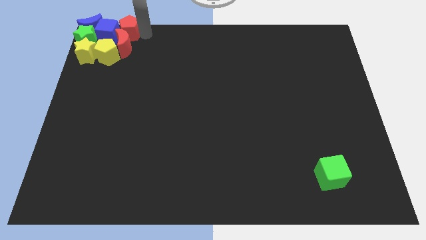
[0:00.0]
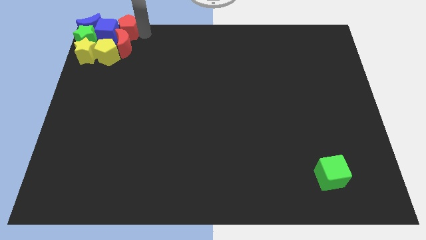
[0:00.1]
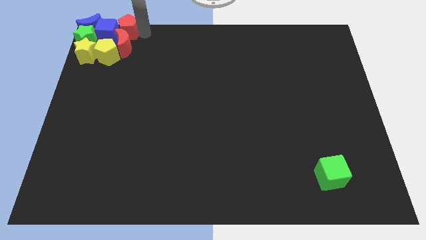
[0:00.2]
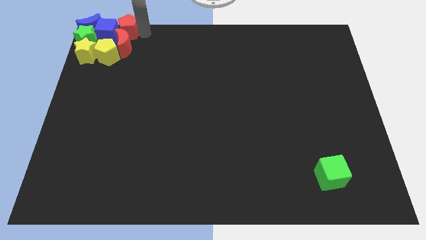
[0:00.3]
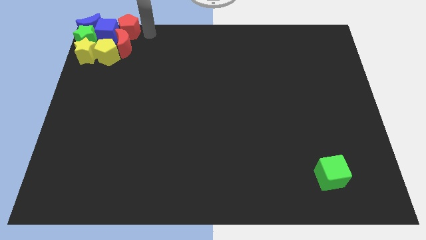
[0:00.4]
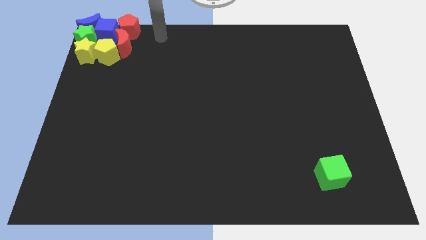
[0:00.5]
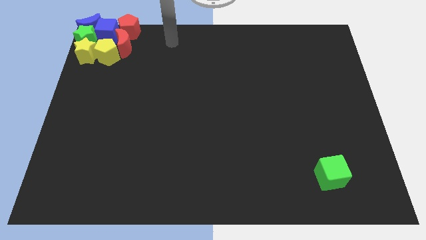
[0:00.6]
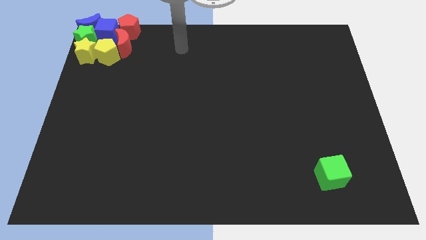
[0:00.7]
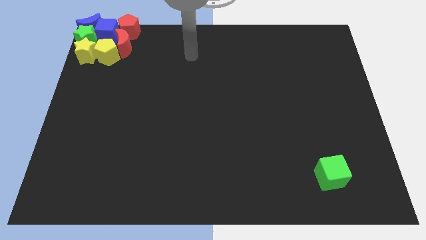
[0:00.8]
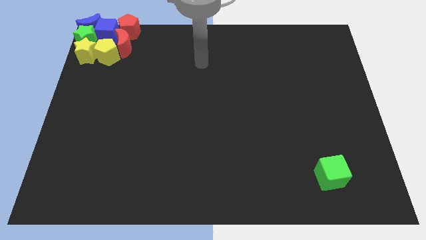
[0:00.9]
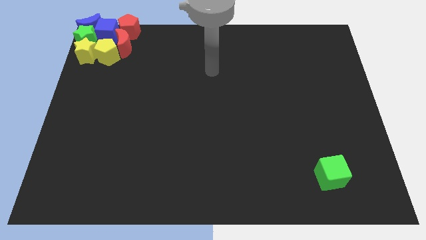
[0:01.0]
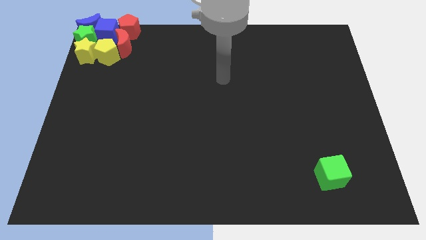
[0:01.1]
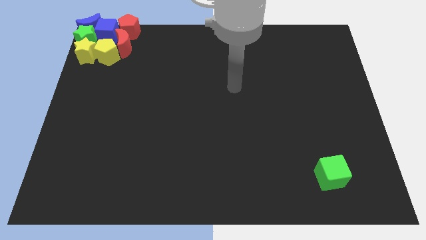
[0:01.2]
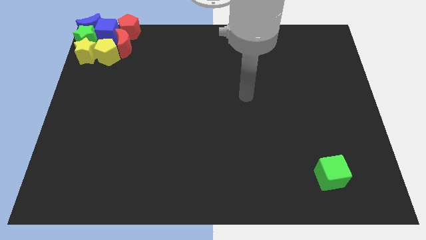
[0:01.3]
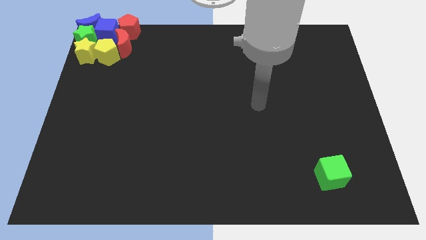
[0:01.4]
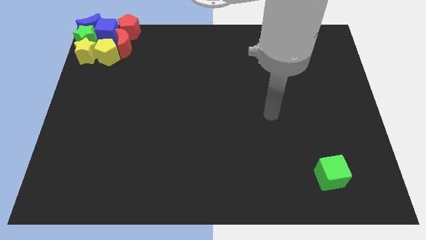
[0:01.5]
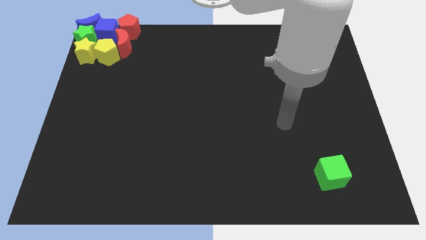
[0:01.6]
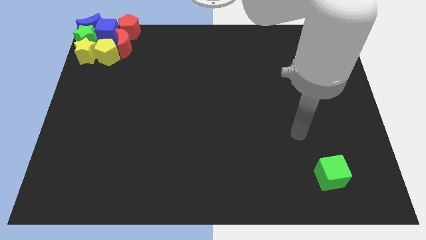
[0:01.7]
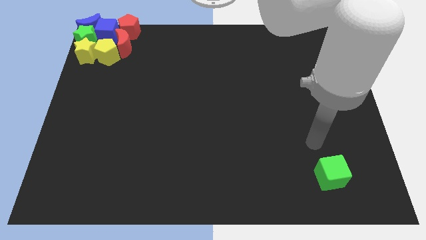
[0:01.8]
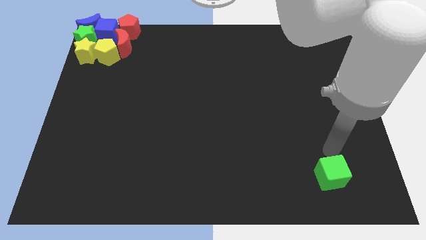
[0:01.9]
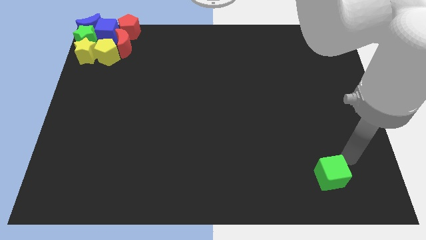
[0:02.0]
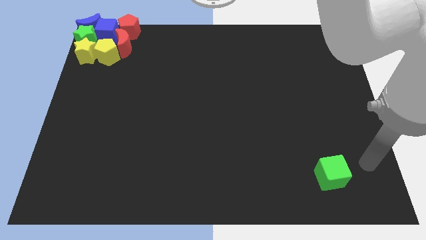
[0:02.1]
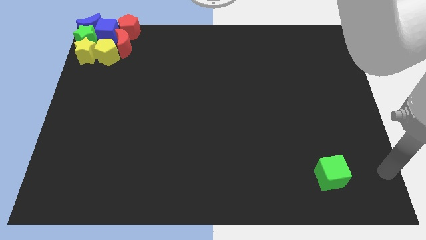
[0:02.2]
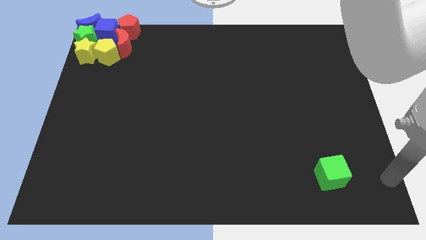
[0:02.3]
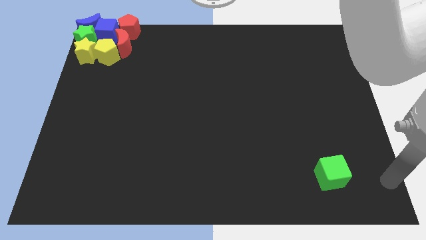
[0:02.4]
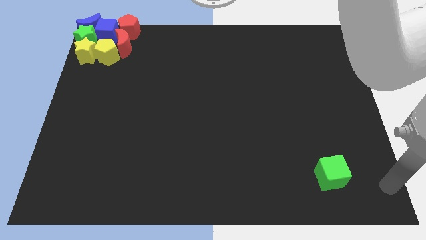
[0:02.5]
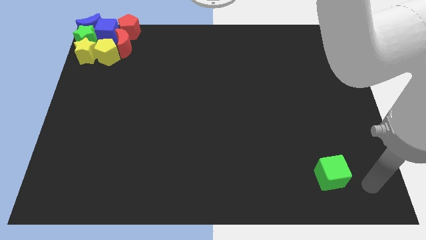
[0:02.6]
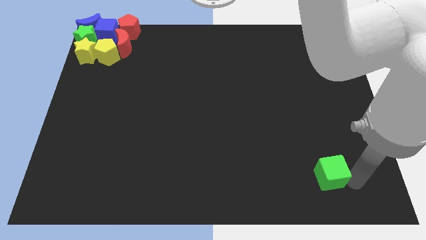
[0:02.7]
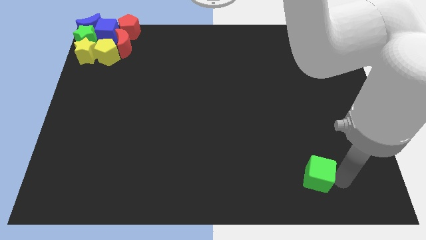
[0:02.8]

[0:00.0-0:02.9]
point your arm below green cube

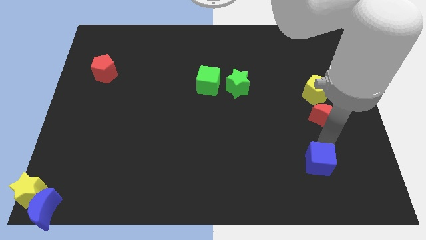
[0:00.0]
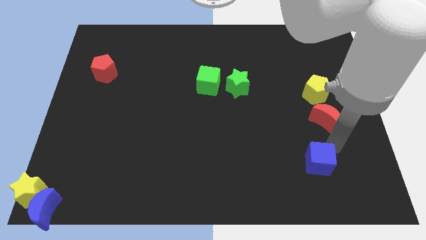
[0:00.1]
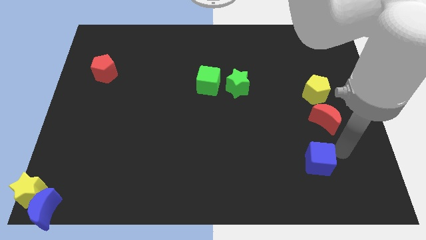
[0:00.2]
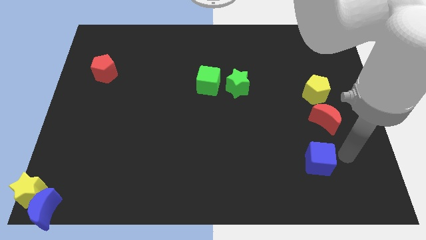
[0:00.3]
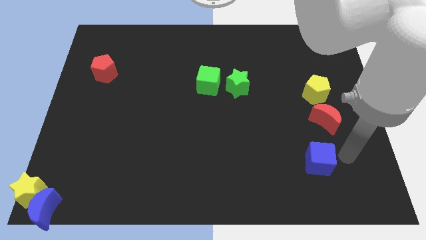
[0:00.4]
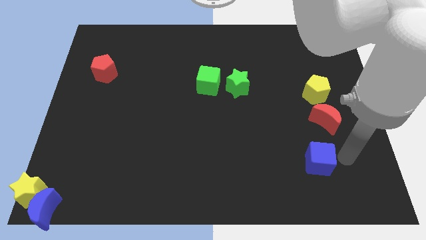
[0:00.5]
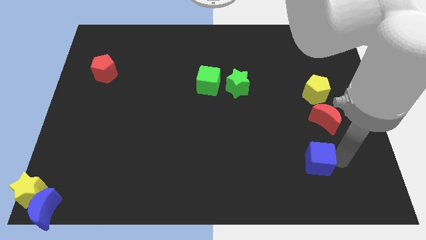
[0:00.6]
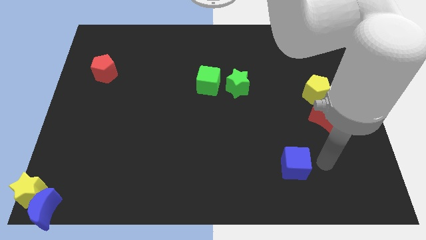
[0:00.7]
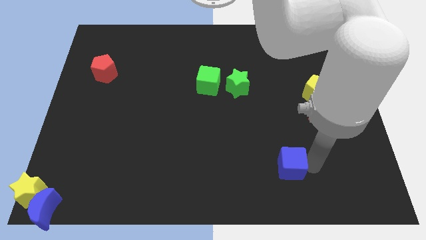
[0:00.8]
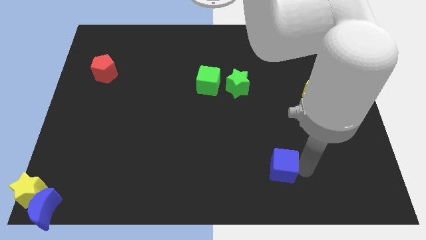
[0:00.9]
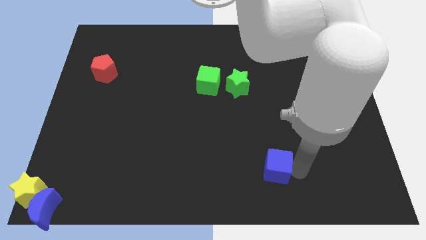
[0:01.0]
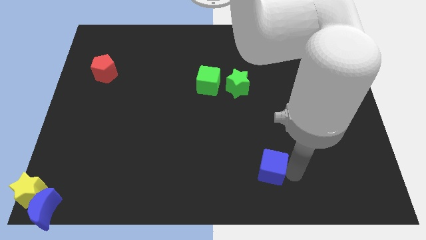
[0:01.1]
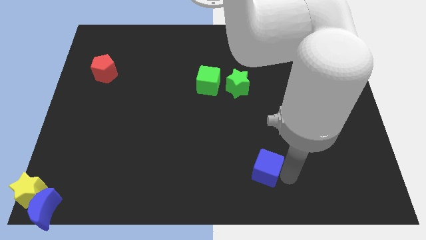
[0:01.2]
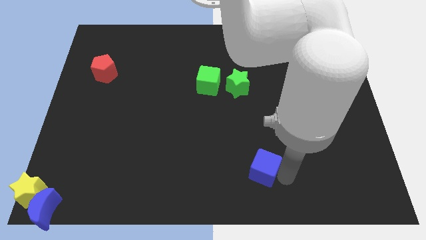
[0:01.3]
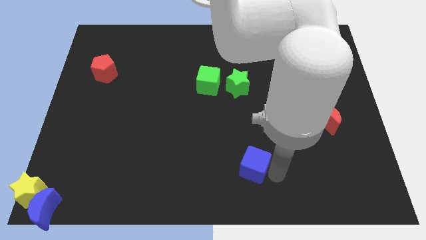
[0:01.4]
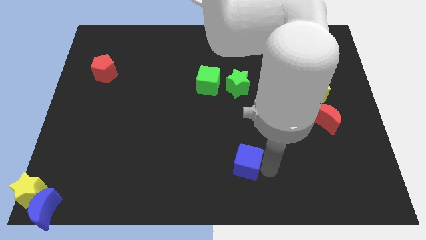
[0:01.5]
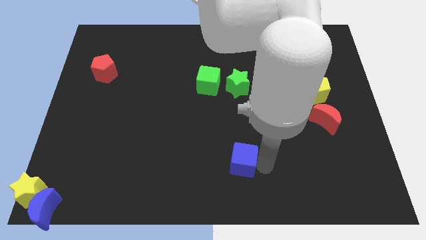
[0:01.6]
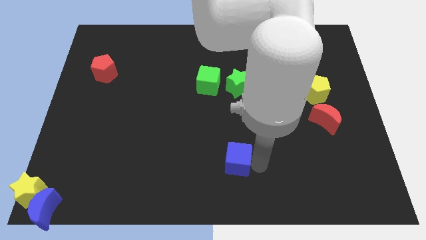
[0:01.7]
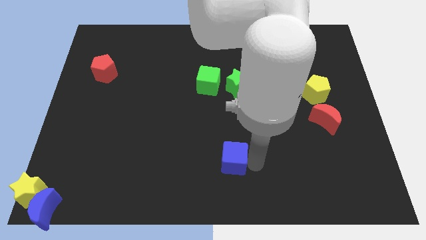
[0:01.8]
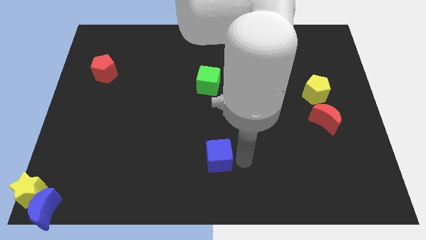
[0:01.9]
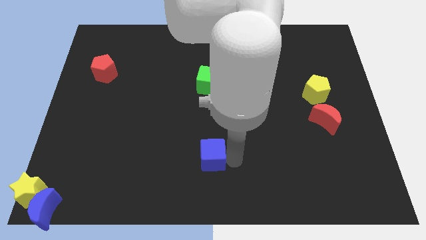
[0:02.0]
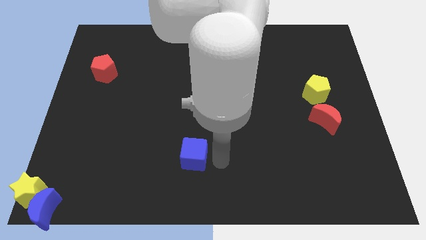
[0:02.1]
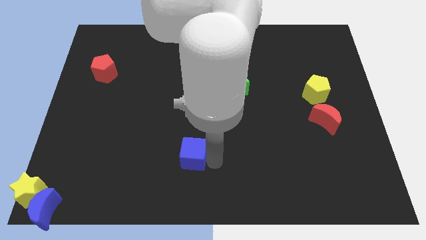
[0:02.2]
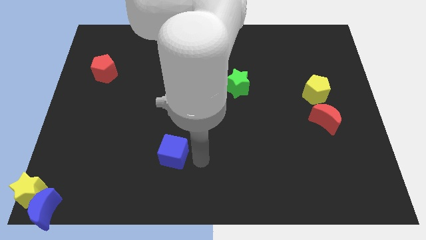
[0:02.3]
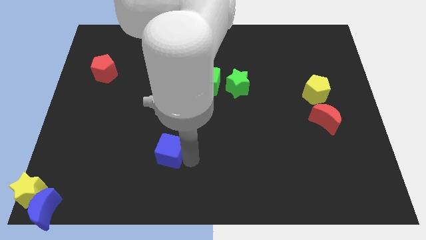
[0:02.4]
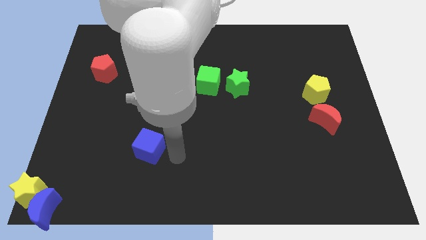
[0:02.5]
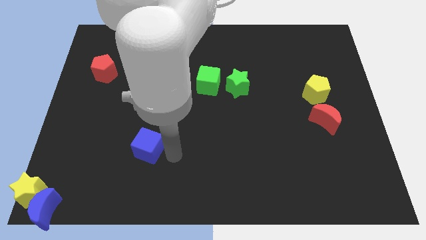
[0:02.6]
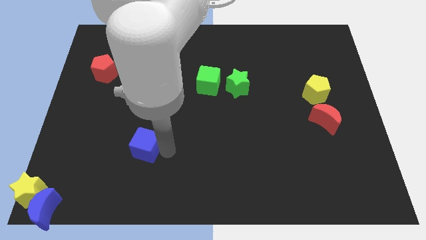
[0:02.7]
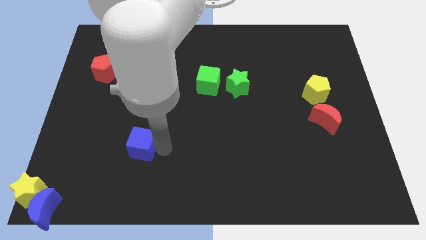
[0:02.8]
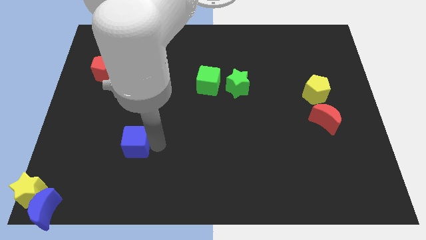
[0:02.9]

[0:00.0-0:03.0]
move the blue cube to the bottom left of the green cube

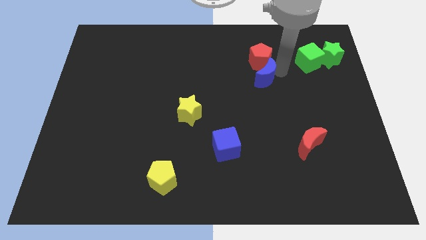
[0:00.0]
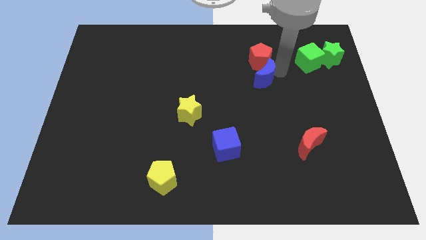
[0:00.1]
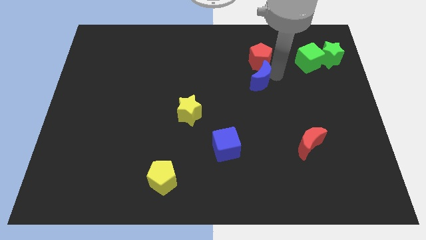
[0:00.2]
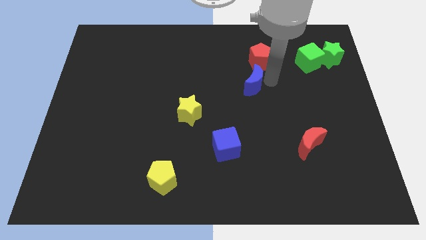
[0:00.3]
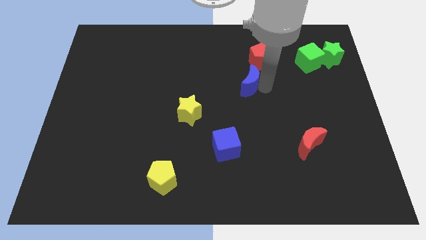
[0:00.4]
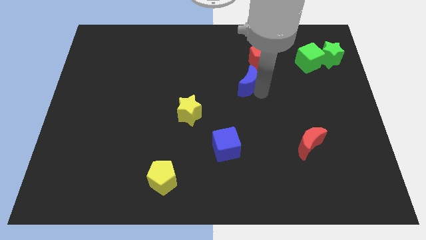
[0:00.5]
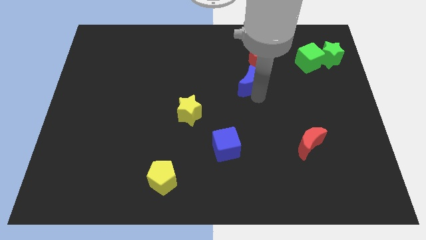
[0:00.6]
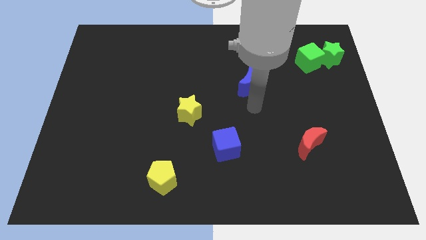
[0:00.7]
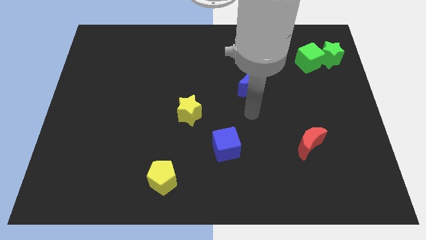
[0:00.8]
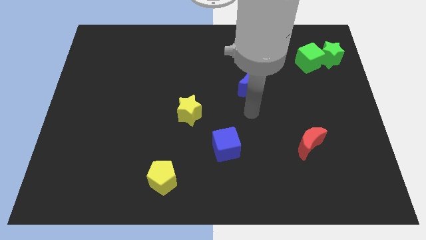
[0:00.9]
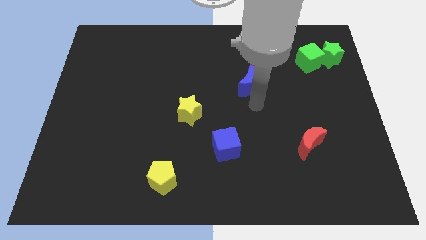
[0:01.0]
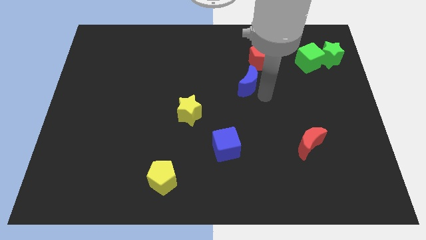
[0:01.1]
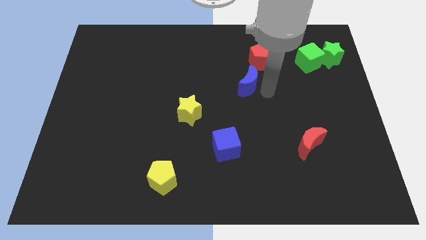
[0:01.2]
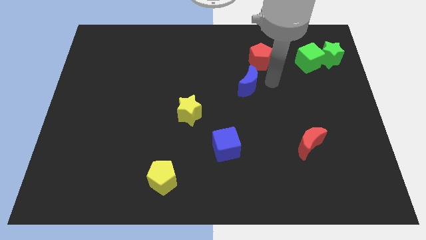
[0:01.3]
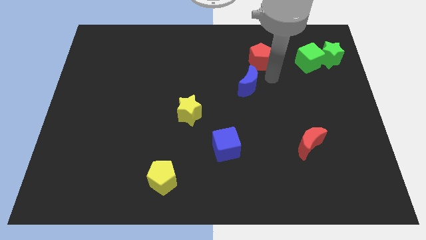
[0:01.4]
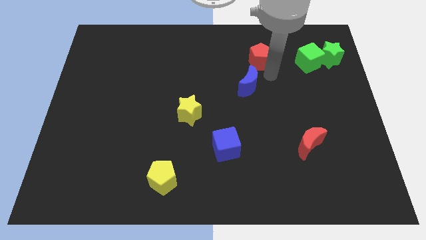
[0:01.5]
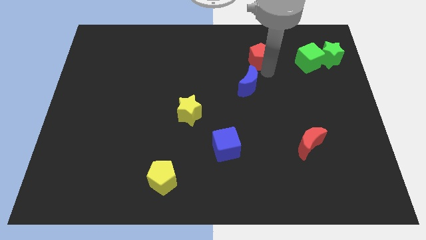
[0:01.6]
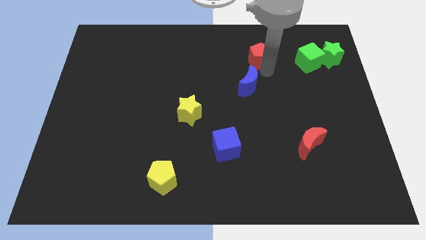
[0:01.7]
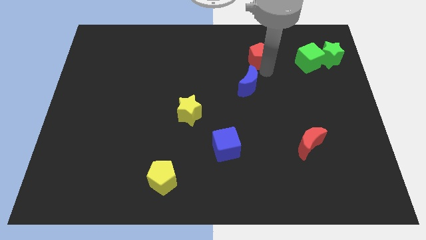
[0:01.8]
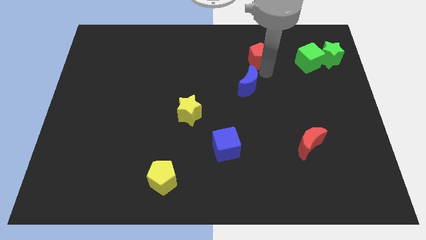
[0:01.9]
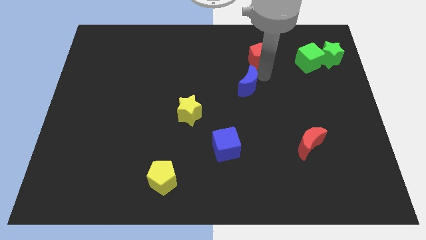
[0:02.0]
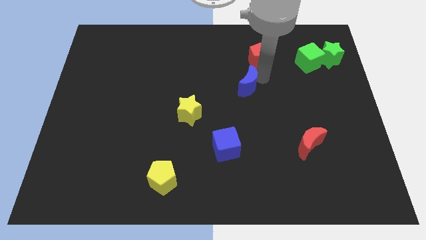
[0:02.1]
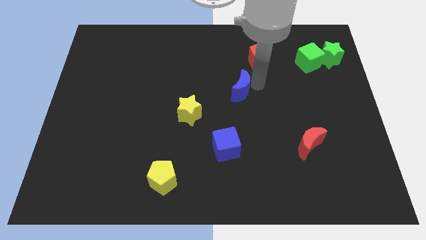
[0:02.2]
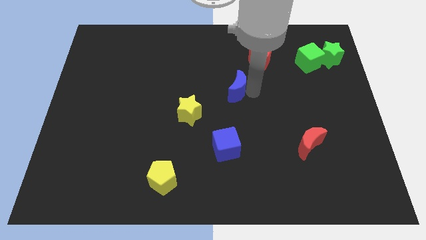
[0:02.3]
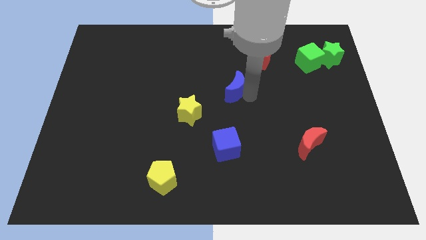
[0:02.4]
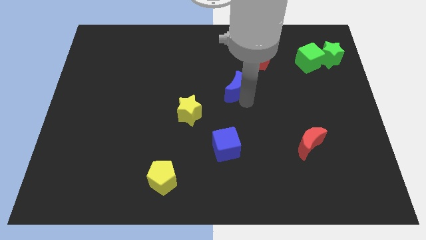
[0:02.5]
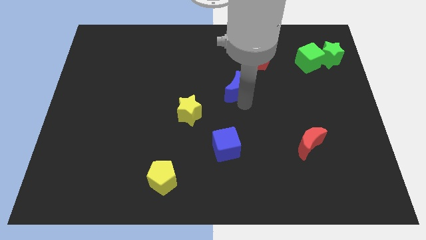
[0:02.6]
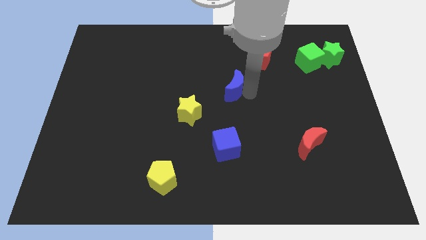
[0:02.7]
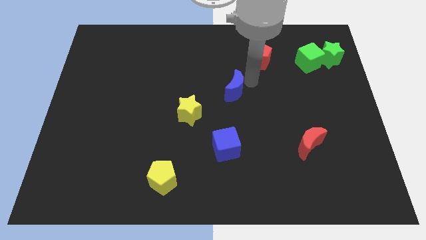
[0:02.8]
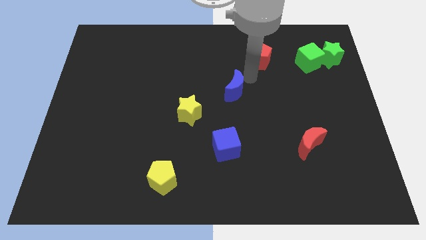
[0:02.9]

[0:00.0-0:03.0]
place the blue crescent diagonally top left to the red moon
